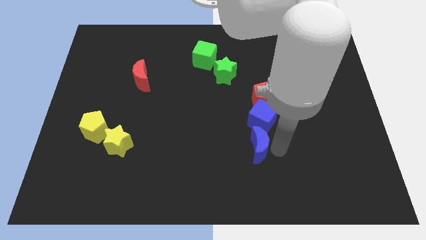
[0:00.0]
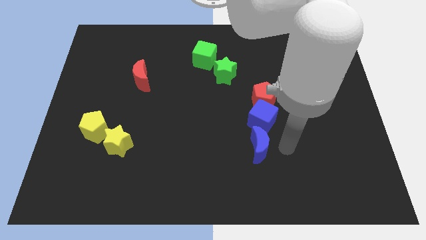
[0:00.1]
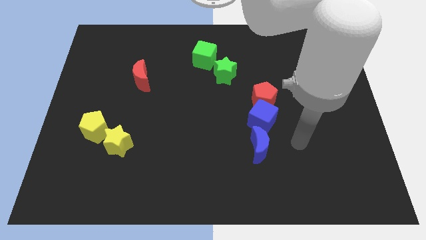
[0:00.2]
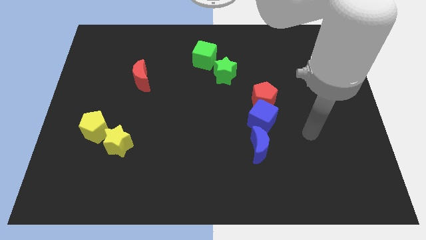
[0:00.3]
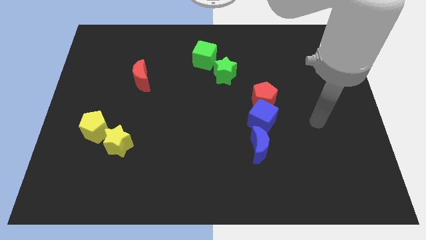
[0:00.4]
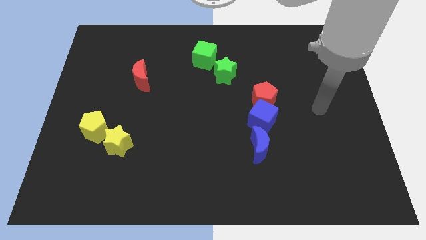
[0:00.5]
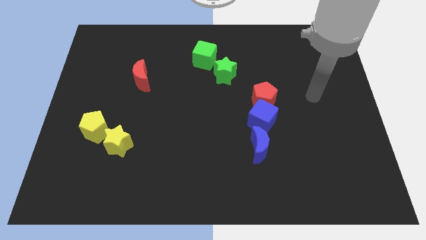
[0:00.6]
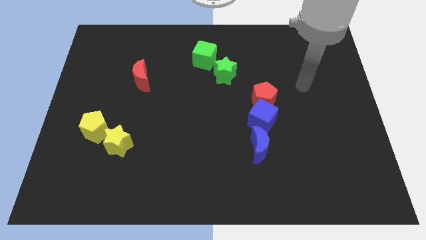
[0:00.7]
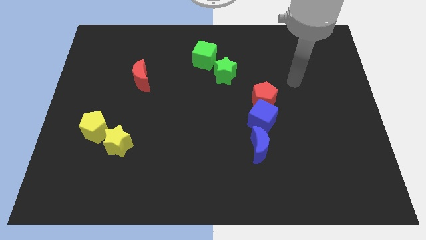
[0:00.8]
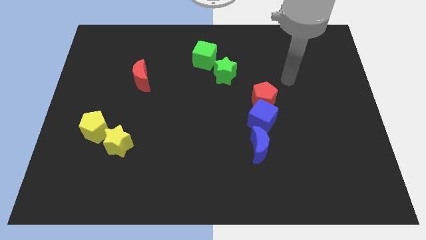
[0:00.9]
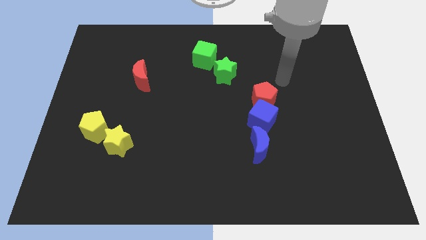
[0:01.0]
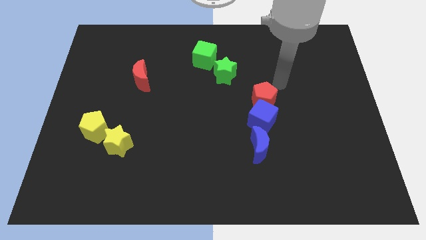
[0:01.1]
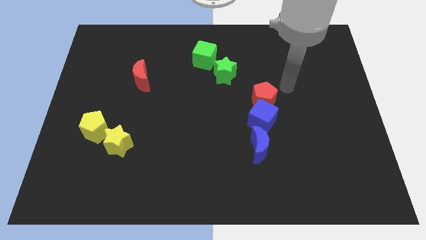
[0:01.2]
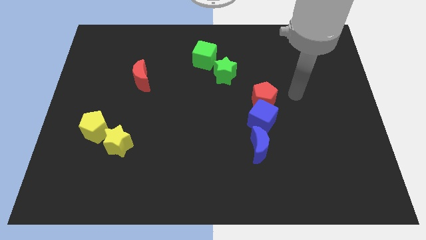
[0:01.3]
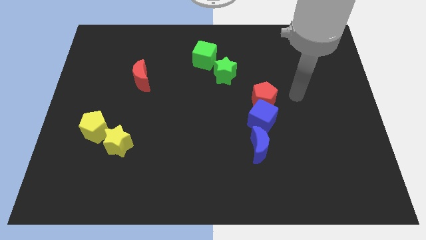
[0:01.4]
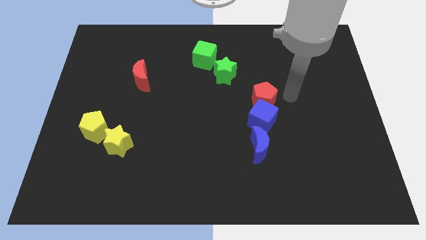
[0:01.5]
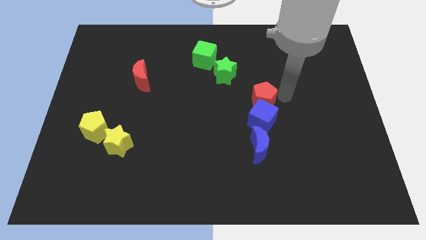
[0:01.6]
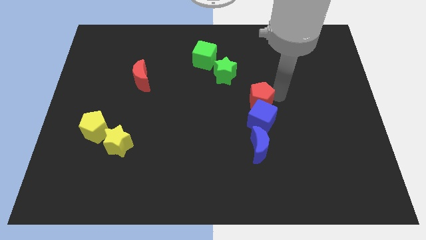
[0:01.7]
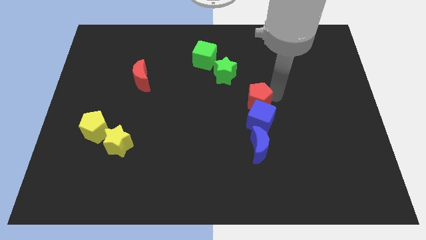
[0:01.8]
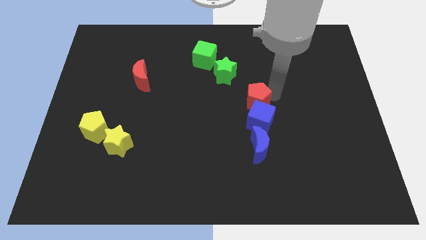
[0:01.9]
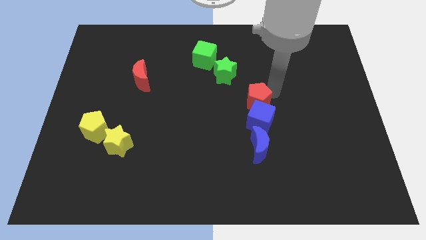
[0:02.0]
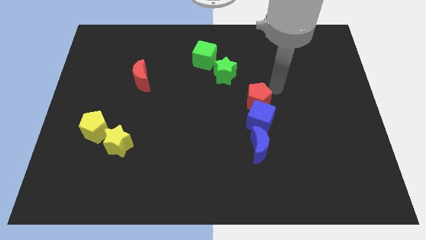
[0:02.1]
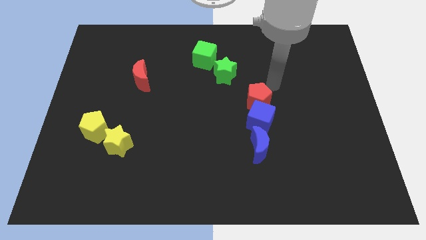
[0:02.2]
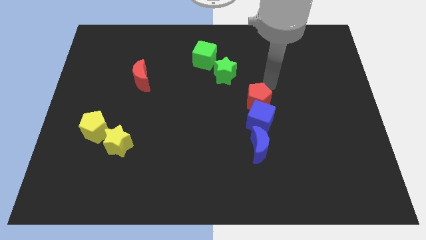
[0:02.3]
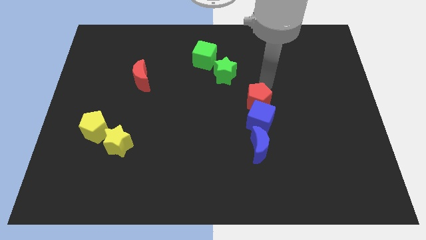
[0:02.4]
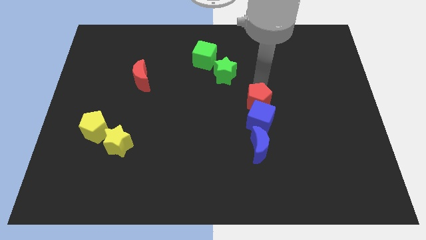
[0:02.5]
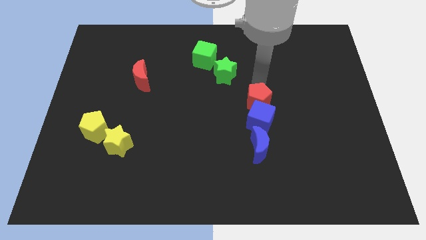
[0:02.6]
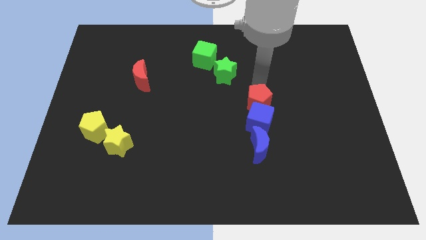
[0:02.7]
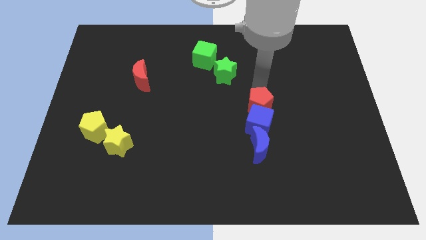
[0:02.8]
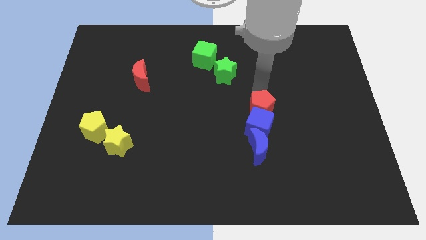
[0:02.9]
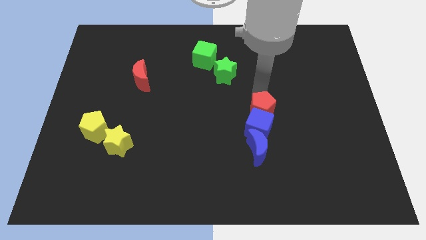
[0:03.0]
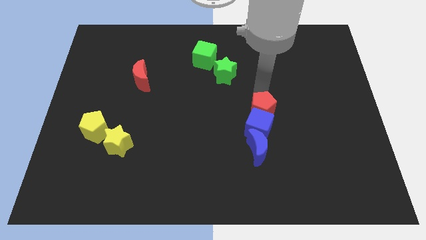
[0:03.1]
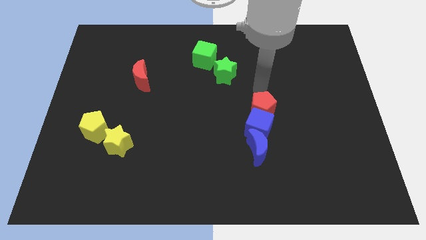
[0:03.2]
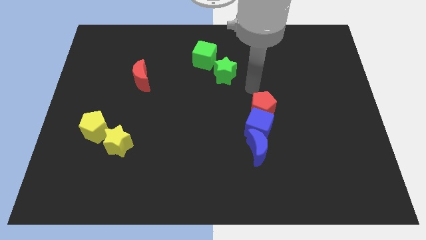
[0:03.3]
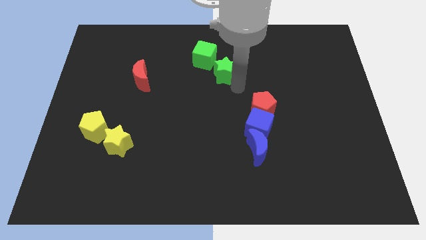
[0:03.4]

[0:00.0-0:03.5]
push the red pentagon above the blue cube

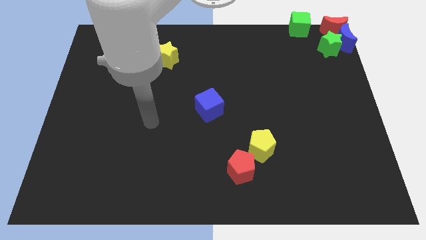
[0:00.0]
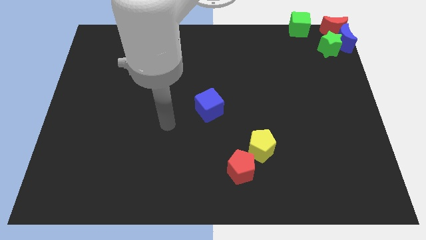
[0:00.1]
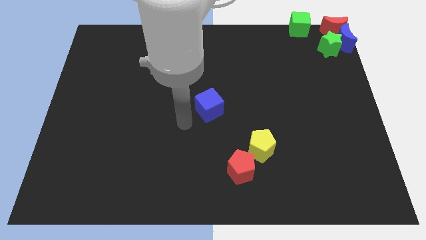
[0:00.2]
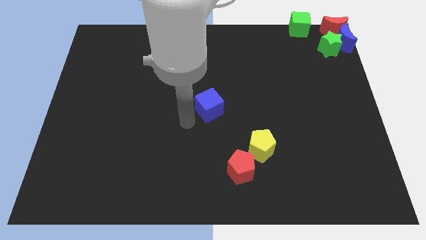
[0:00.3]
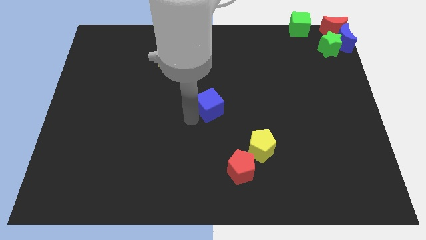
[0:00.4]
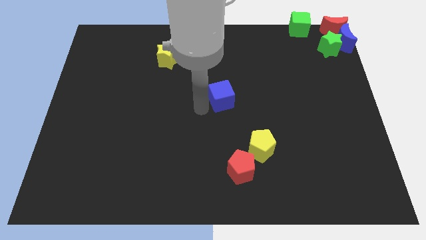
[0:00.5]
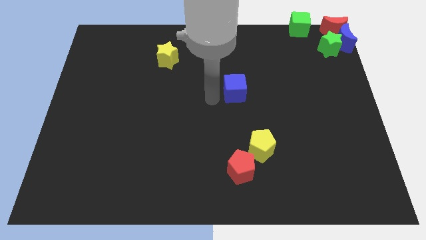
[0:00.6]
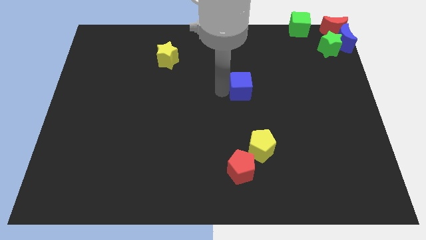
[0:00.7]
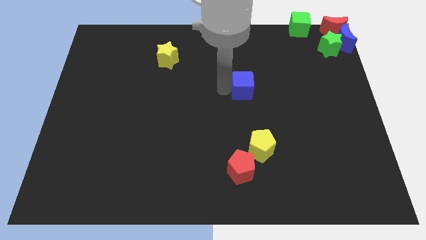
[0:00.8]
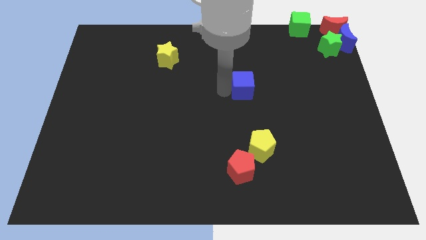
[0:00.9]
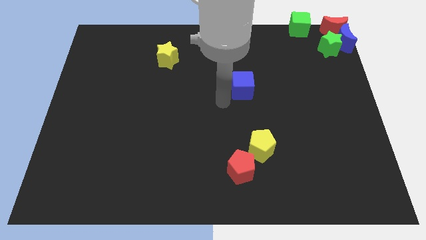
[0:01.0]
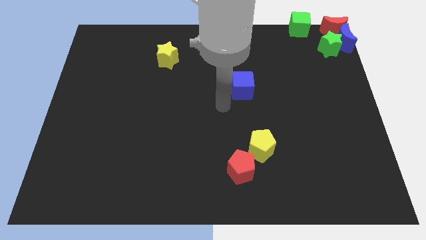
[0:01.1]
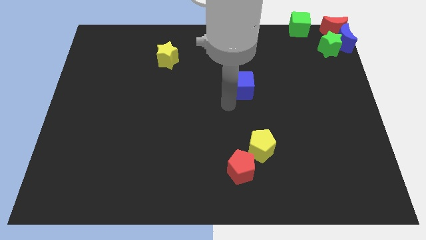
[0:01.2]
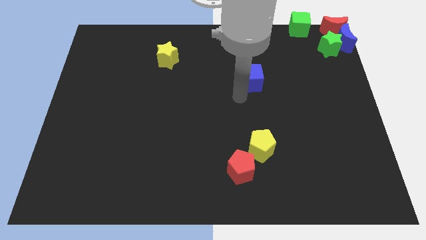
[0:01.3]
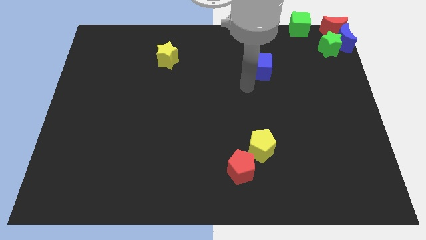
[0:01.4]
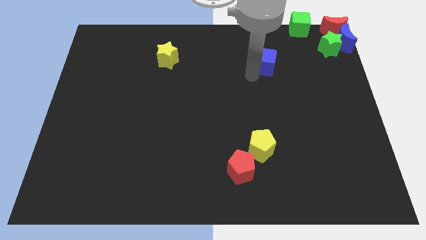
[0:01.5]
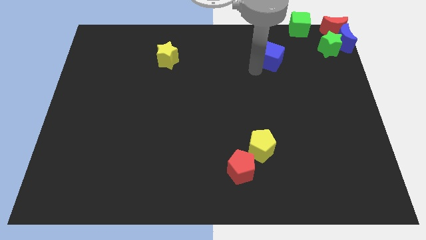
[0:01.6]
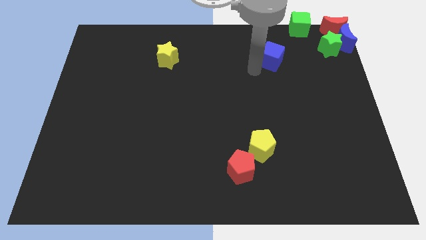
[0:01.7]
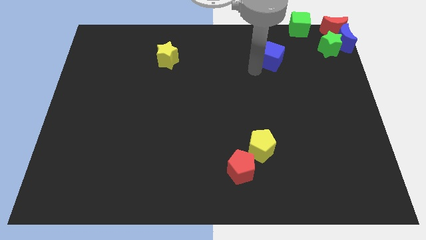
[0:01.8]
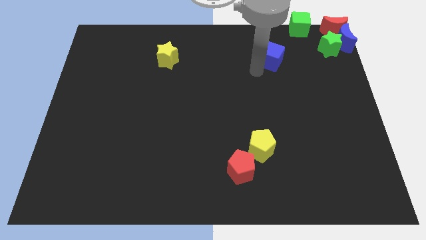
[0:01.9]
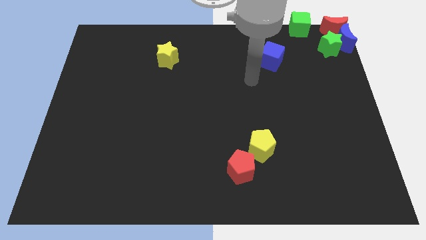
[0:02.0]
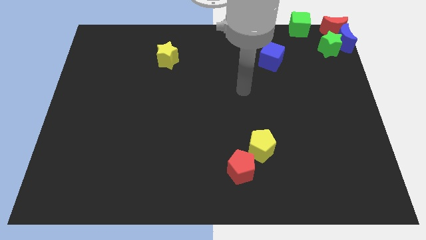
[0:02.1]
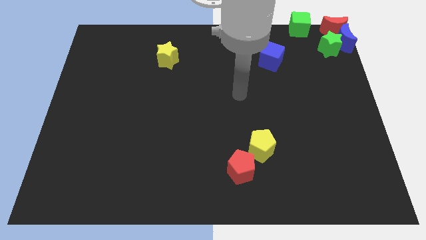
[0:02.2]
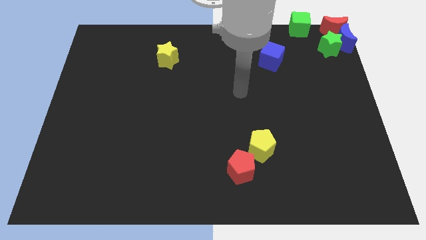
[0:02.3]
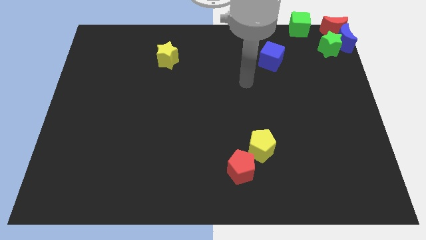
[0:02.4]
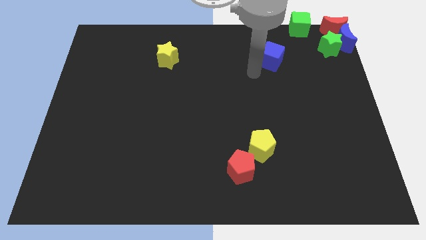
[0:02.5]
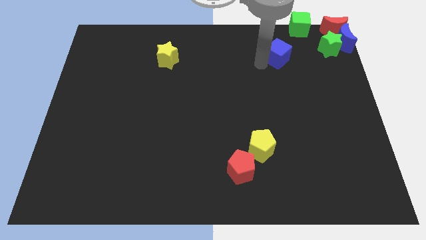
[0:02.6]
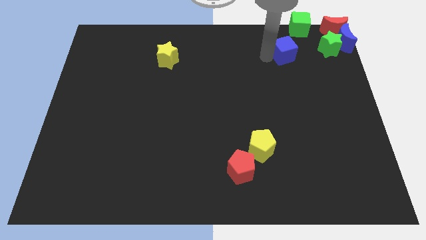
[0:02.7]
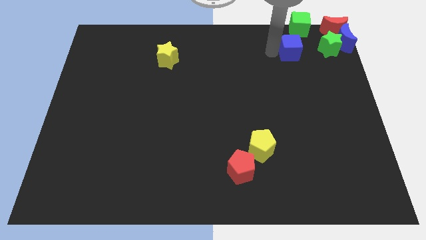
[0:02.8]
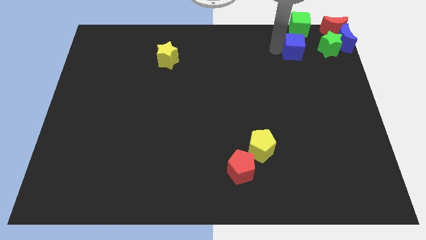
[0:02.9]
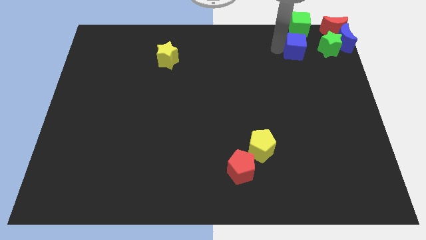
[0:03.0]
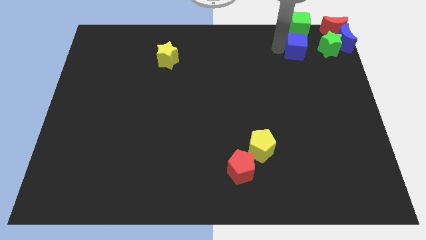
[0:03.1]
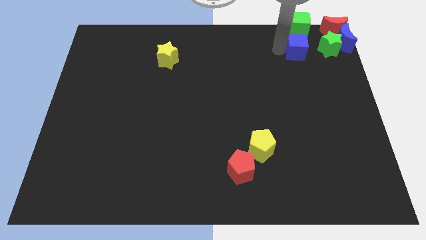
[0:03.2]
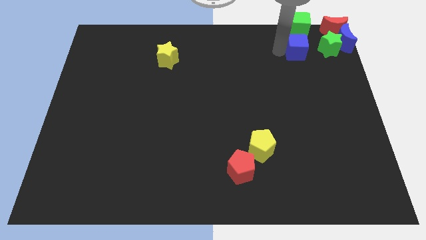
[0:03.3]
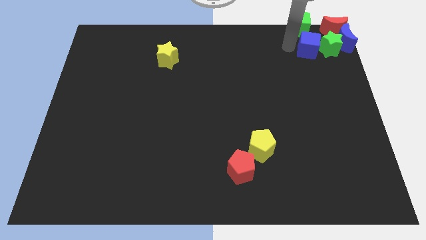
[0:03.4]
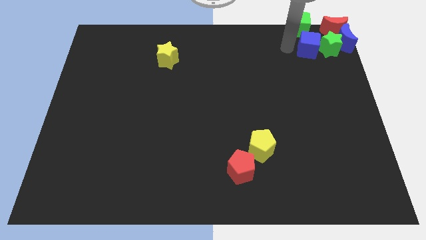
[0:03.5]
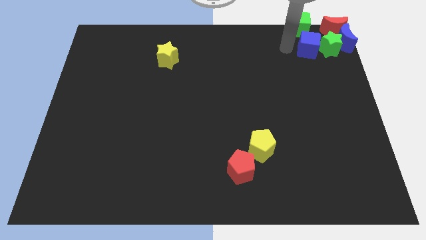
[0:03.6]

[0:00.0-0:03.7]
place blue cube to the bottom of green cube

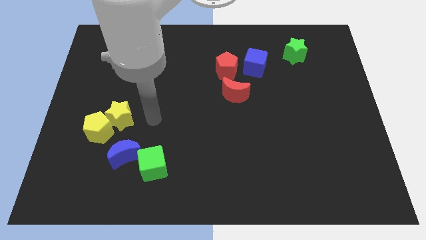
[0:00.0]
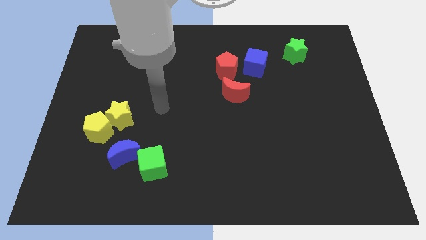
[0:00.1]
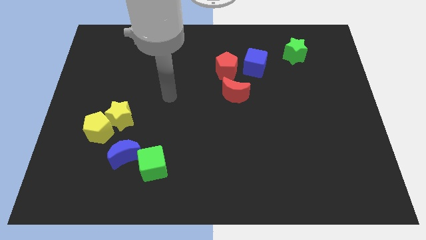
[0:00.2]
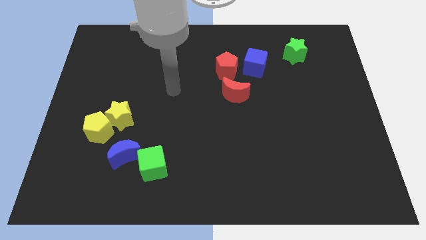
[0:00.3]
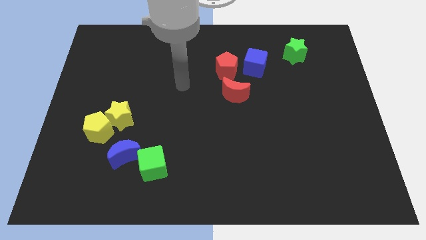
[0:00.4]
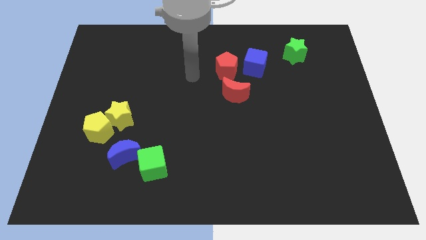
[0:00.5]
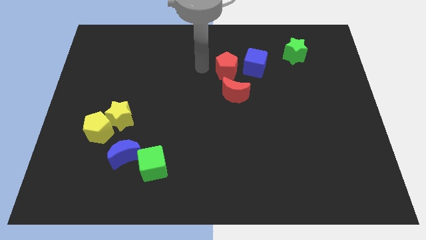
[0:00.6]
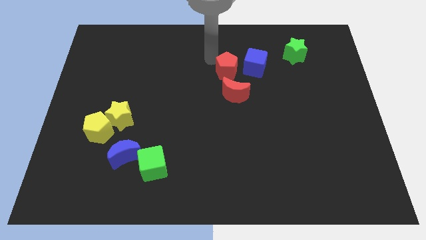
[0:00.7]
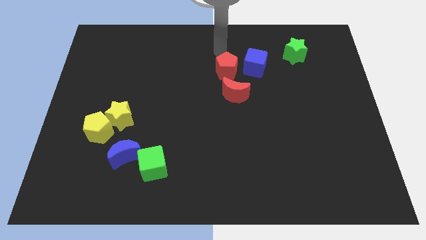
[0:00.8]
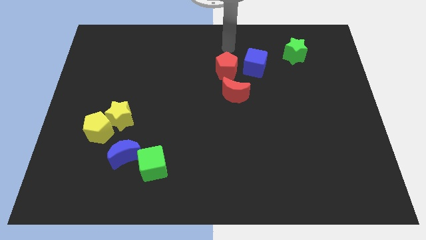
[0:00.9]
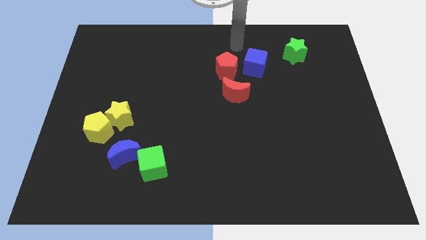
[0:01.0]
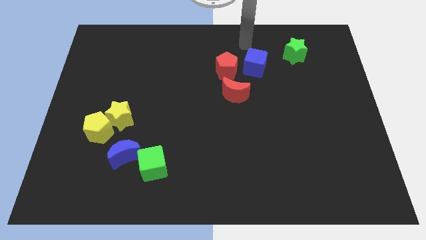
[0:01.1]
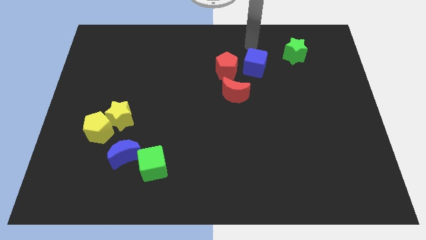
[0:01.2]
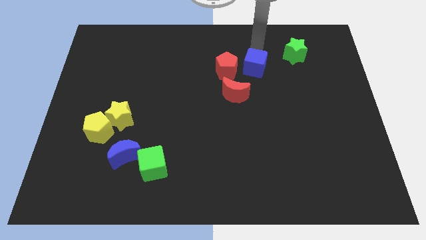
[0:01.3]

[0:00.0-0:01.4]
place arm on the top of blue cube

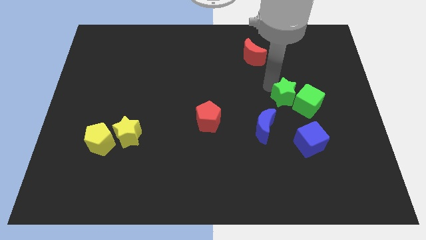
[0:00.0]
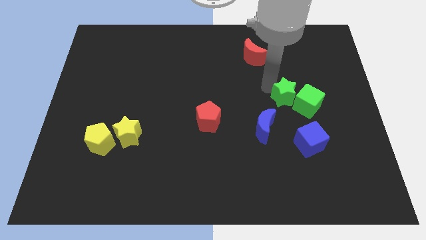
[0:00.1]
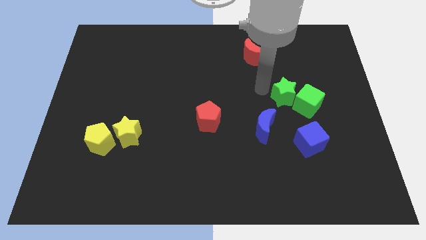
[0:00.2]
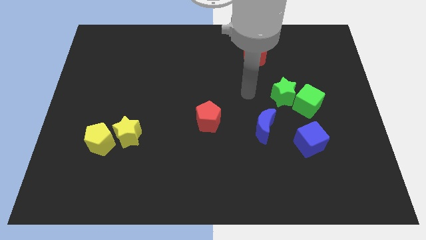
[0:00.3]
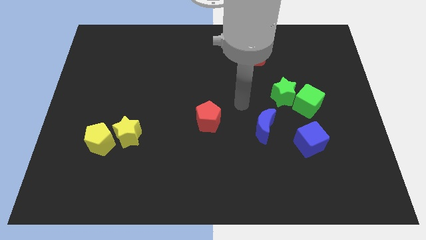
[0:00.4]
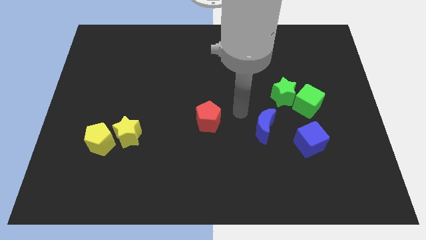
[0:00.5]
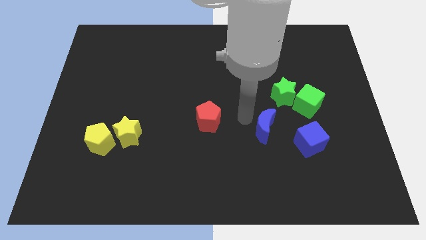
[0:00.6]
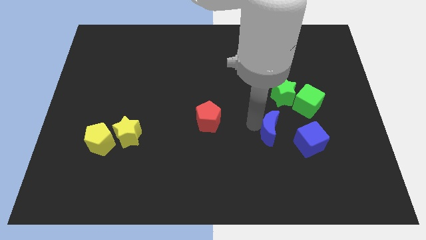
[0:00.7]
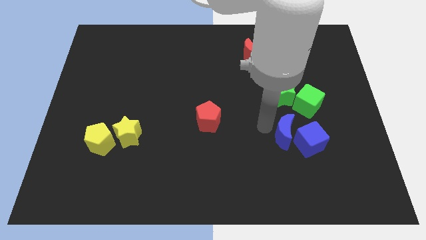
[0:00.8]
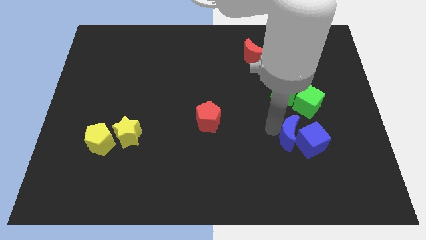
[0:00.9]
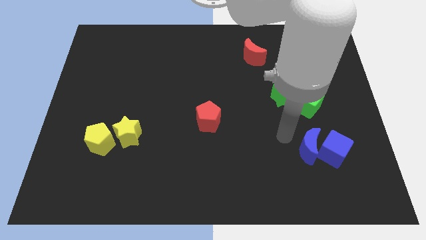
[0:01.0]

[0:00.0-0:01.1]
push the blue moon towards the blue cube
